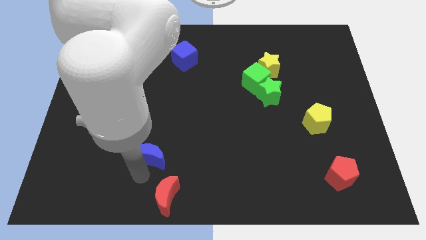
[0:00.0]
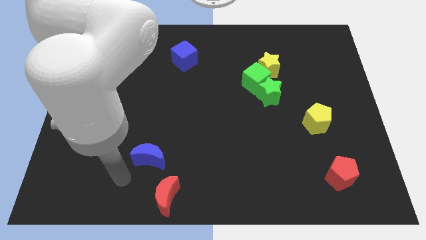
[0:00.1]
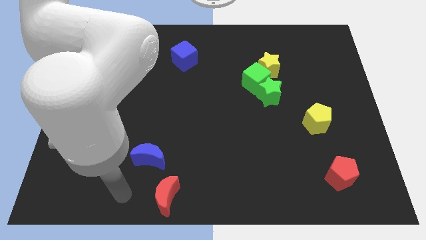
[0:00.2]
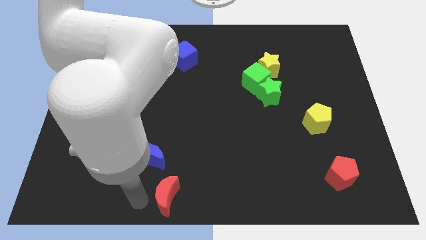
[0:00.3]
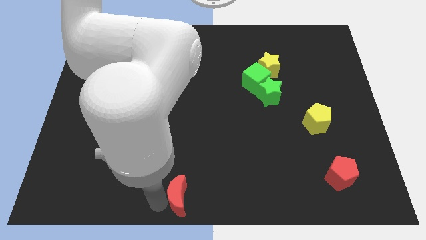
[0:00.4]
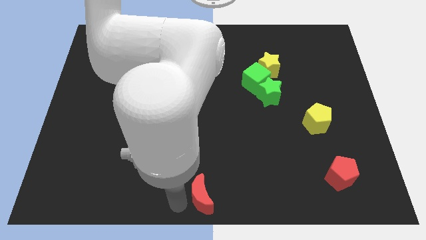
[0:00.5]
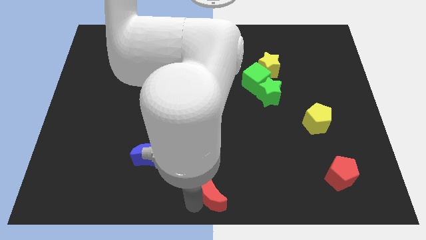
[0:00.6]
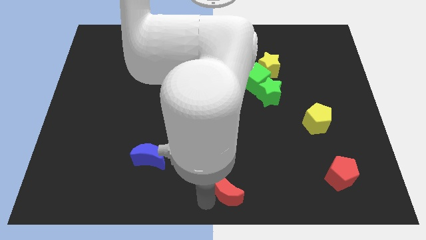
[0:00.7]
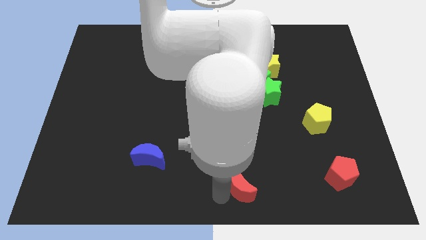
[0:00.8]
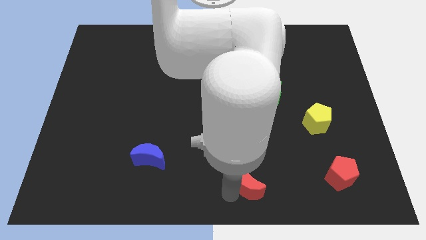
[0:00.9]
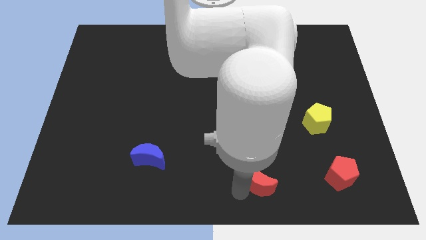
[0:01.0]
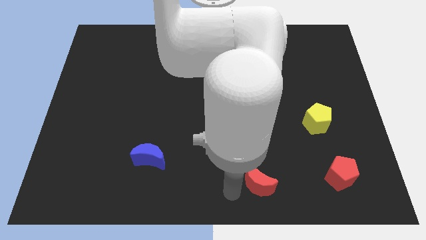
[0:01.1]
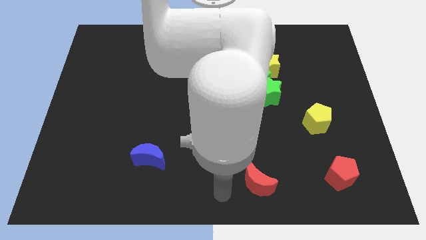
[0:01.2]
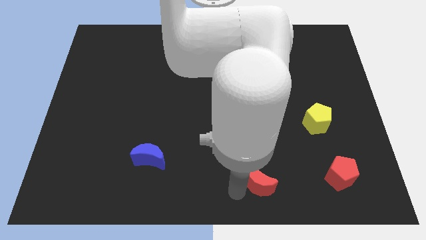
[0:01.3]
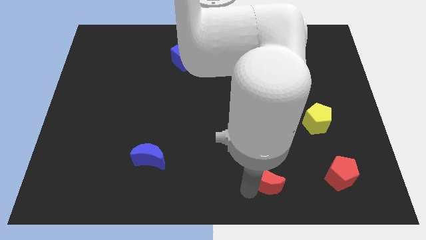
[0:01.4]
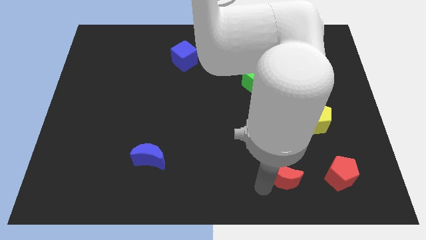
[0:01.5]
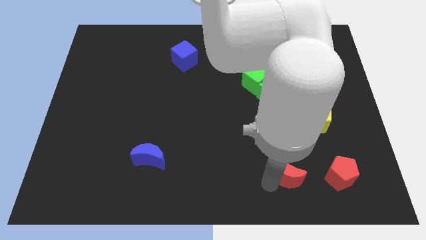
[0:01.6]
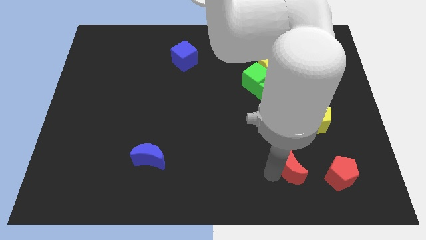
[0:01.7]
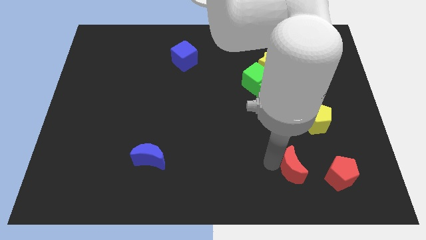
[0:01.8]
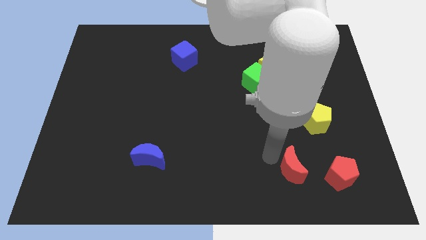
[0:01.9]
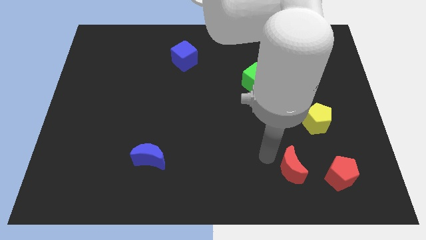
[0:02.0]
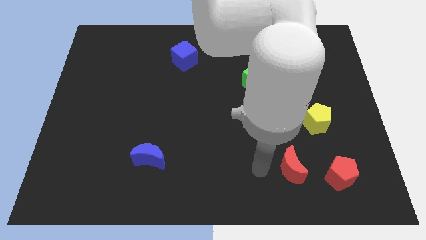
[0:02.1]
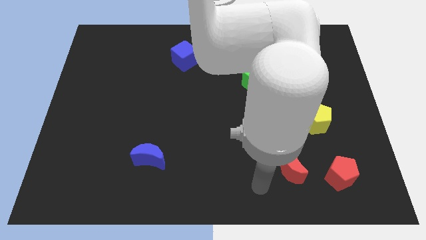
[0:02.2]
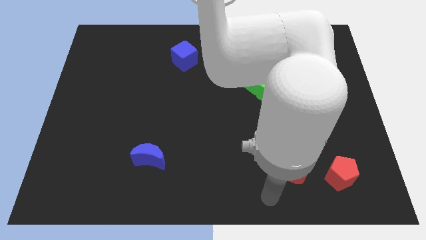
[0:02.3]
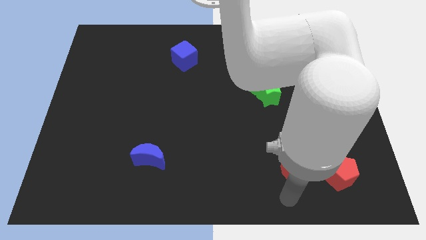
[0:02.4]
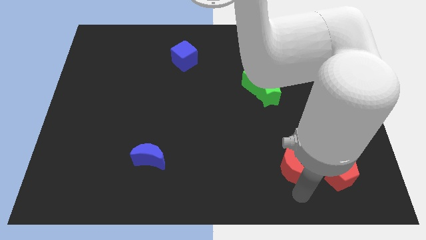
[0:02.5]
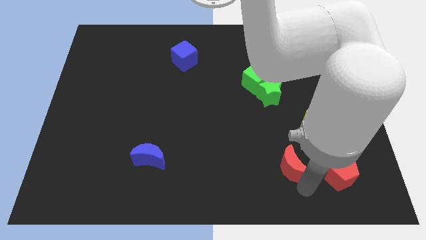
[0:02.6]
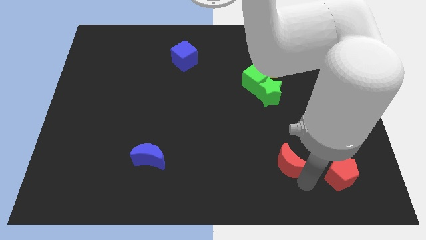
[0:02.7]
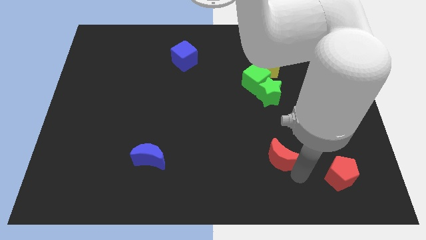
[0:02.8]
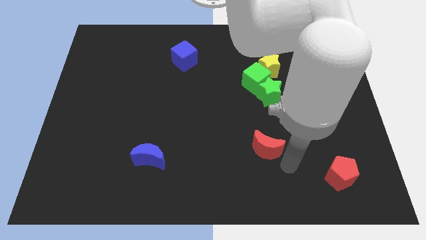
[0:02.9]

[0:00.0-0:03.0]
move red crescent to the left of red pentagon

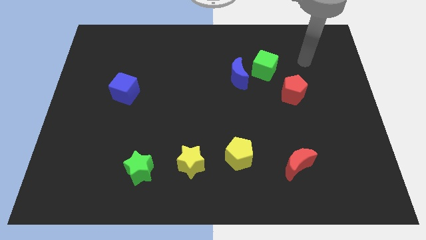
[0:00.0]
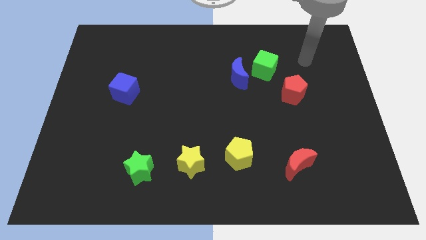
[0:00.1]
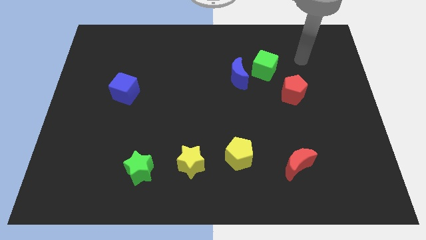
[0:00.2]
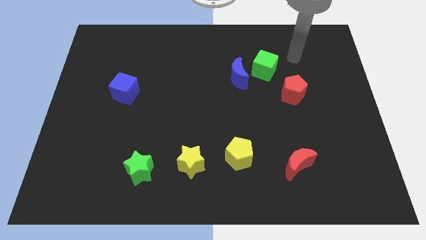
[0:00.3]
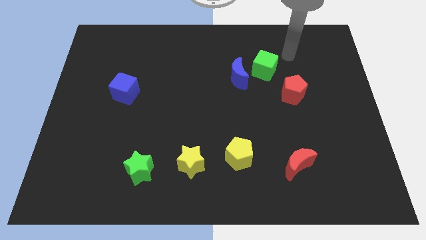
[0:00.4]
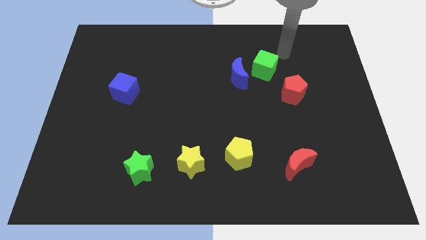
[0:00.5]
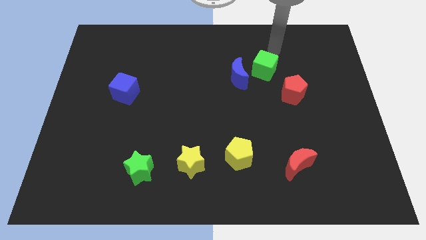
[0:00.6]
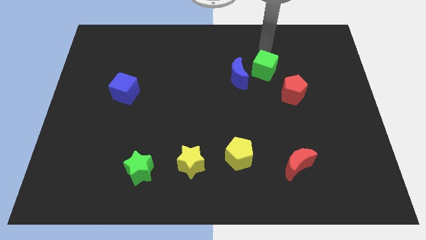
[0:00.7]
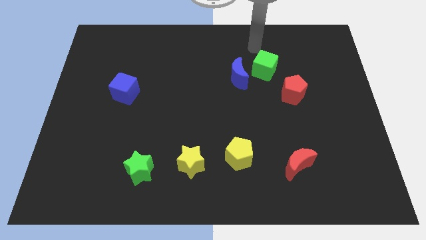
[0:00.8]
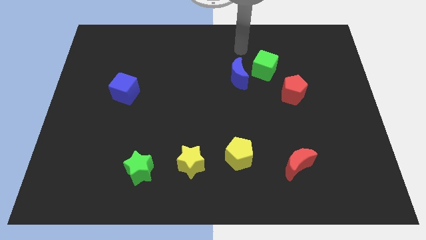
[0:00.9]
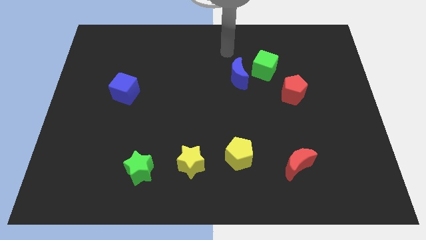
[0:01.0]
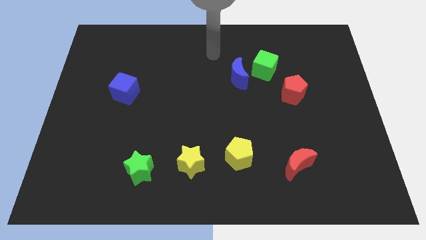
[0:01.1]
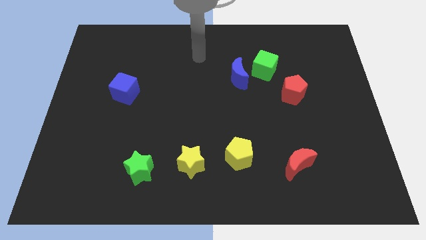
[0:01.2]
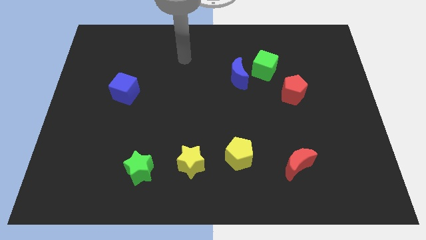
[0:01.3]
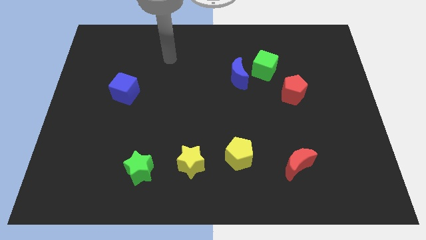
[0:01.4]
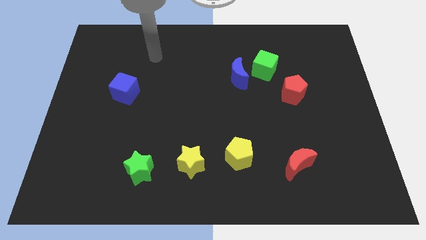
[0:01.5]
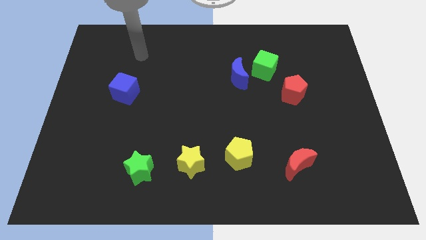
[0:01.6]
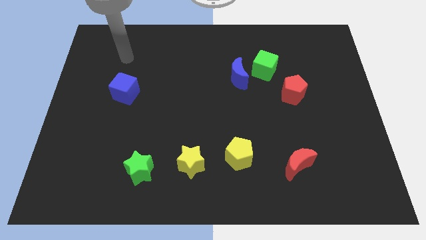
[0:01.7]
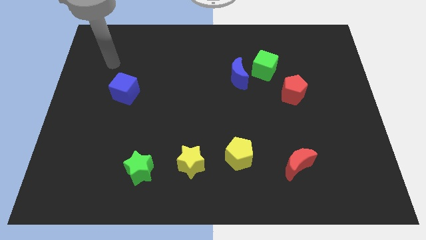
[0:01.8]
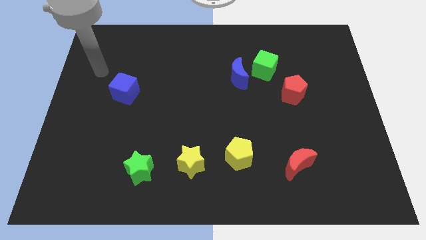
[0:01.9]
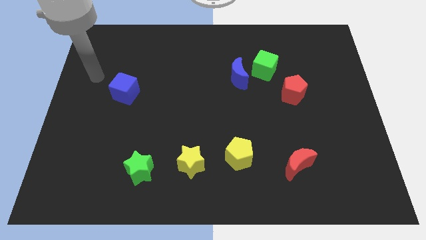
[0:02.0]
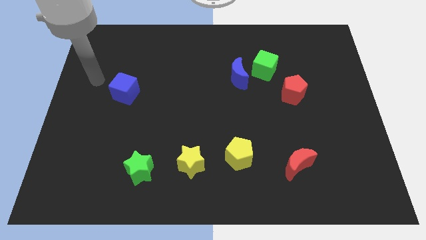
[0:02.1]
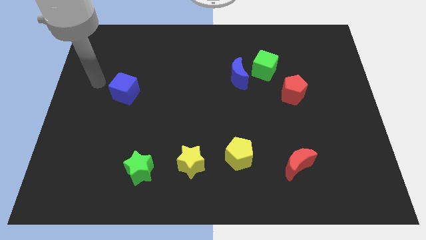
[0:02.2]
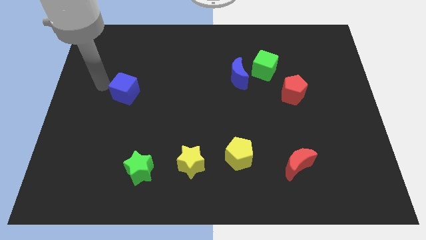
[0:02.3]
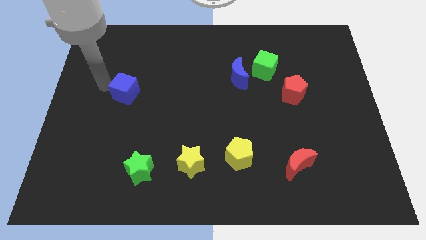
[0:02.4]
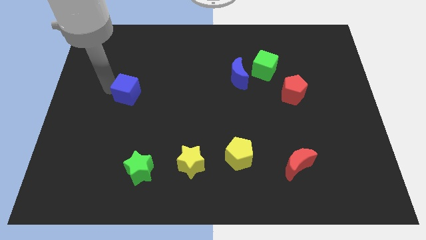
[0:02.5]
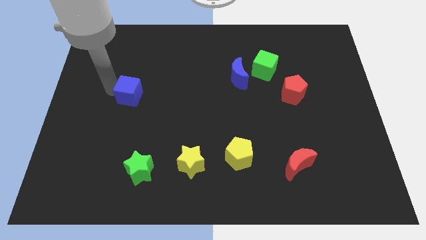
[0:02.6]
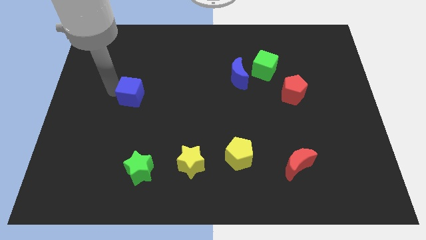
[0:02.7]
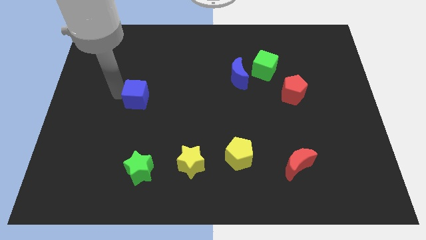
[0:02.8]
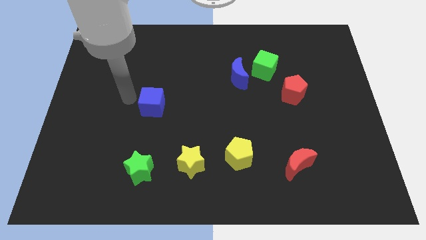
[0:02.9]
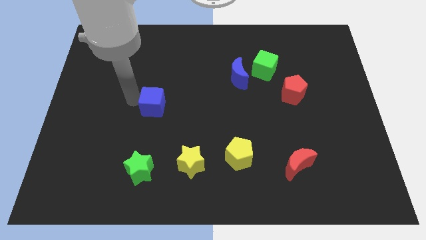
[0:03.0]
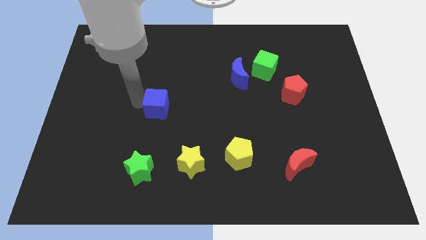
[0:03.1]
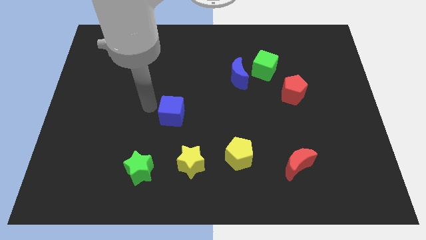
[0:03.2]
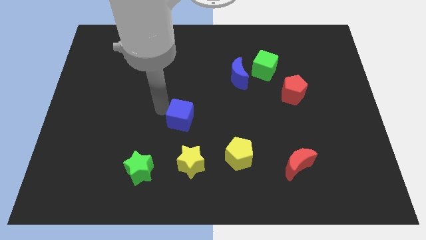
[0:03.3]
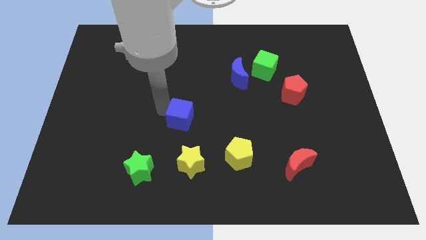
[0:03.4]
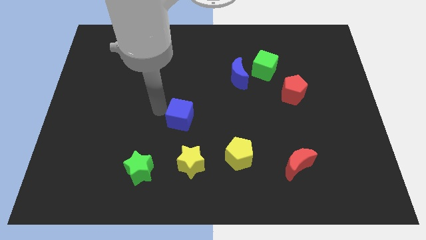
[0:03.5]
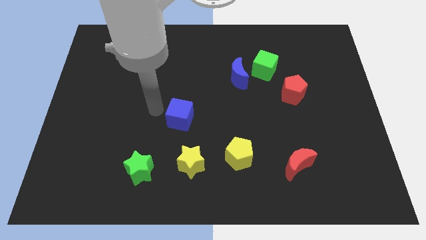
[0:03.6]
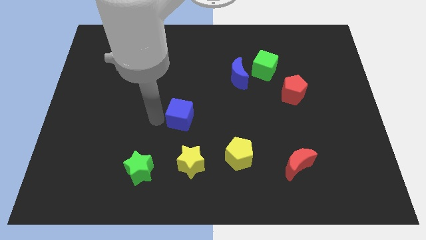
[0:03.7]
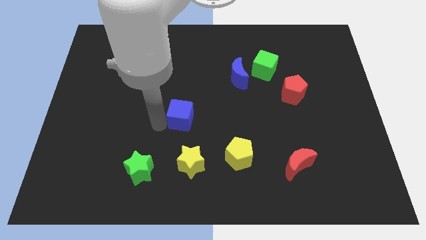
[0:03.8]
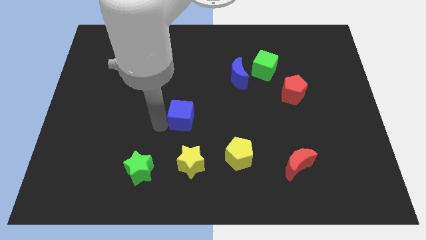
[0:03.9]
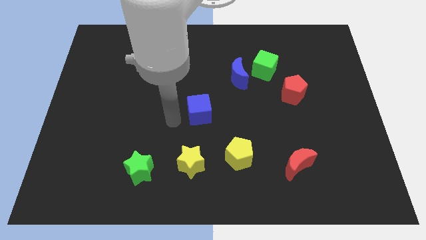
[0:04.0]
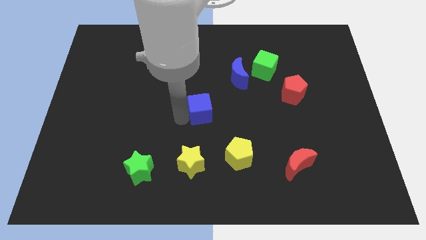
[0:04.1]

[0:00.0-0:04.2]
move the blue cube to the center of the board

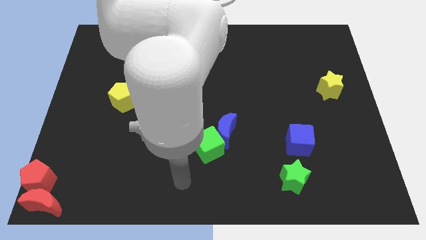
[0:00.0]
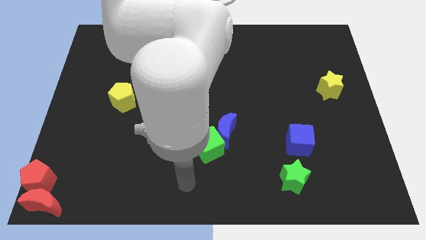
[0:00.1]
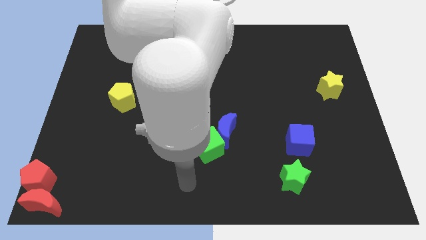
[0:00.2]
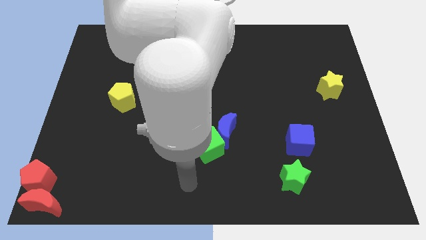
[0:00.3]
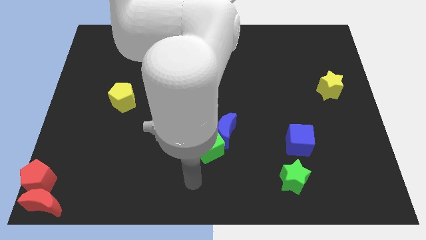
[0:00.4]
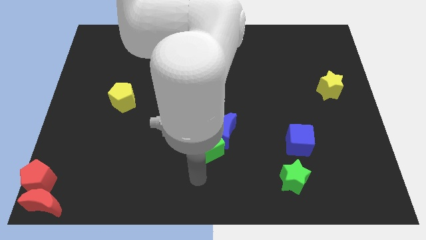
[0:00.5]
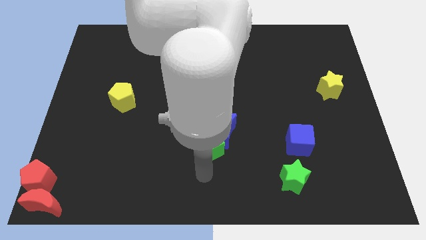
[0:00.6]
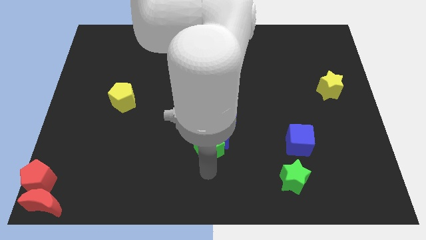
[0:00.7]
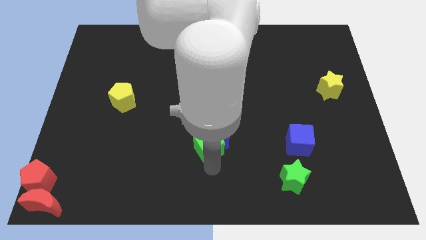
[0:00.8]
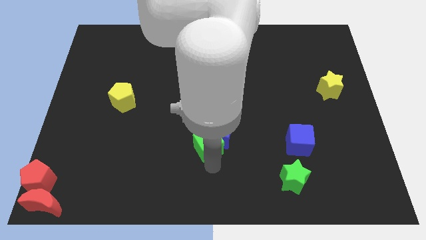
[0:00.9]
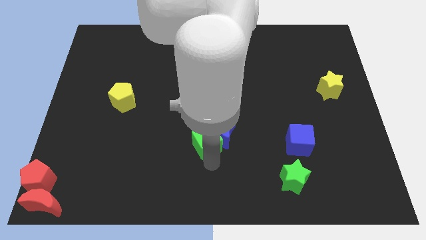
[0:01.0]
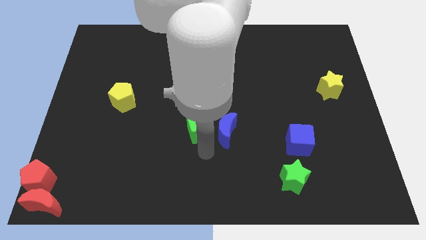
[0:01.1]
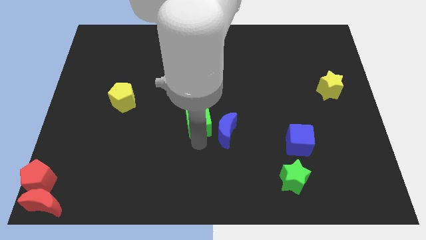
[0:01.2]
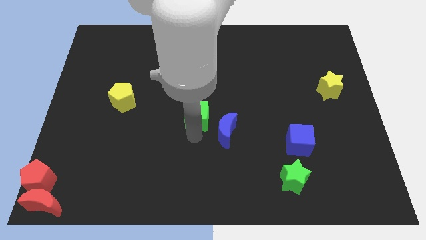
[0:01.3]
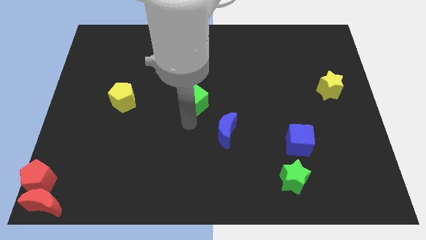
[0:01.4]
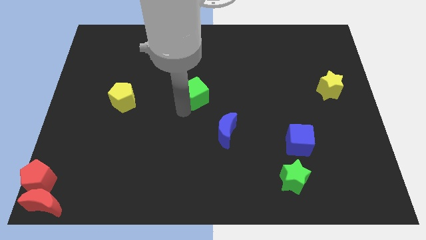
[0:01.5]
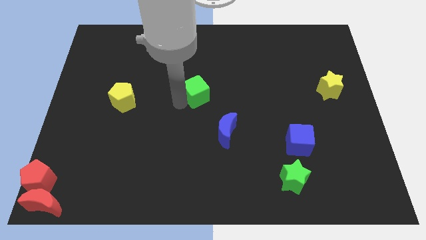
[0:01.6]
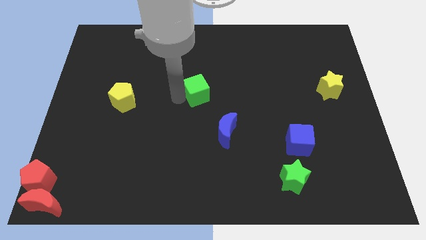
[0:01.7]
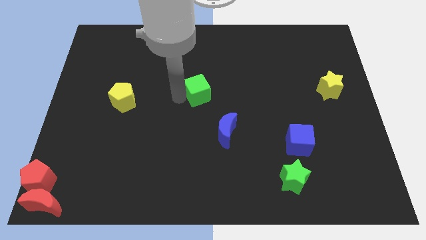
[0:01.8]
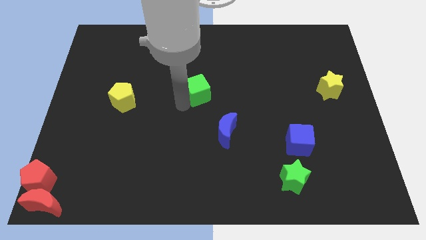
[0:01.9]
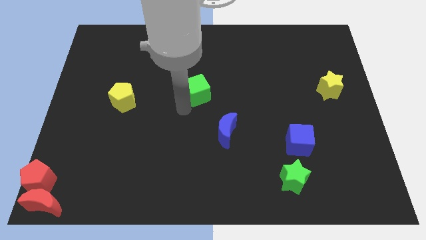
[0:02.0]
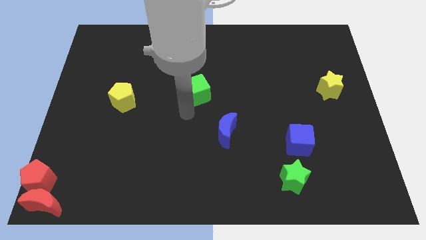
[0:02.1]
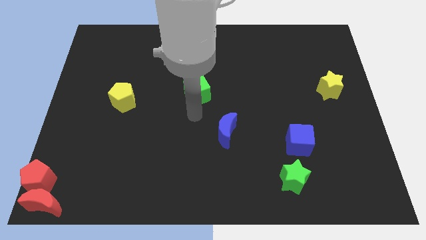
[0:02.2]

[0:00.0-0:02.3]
push the green cube upward
